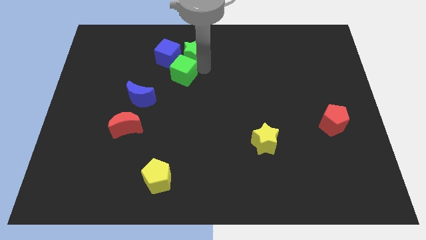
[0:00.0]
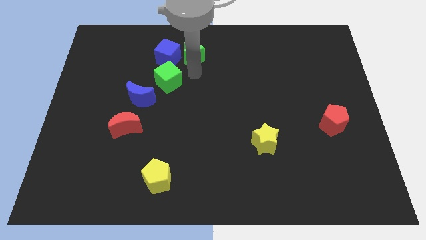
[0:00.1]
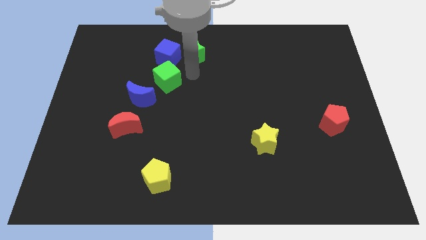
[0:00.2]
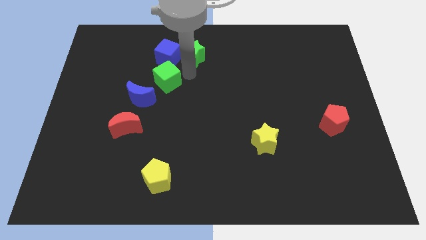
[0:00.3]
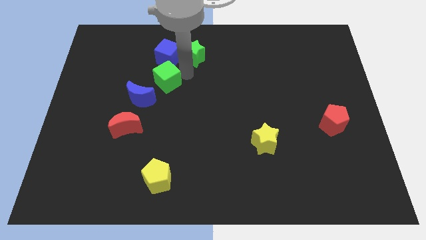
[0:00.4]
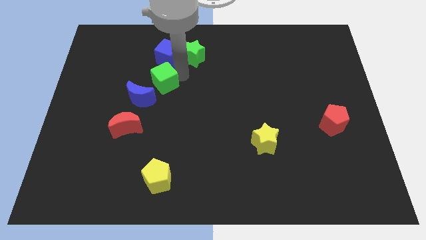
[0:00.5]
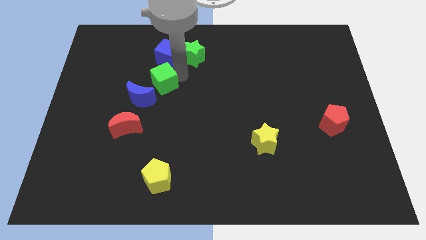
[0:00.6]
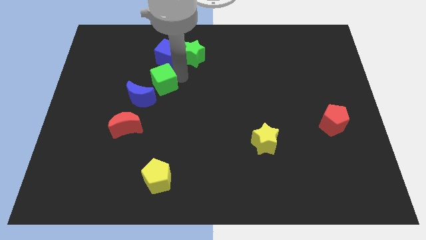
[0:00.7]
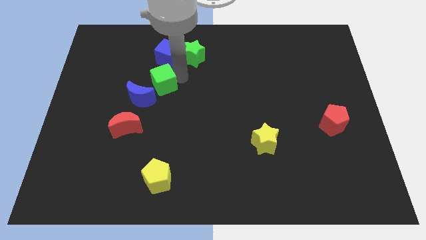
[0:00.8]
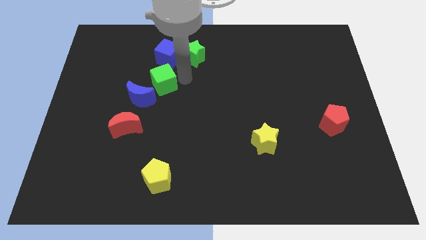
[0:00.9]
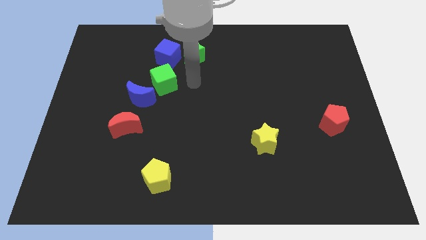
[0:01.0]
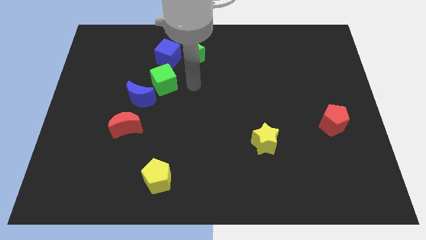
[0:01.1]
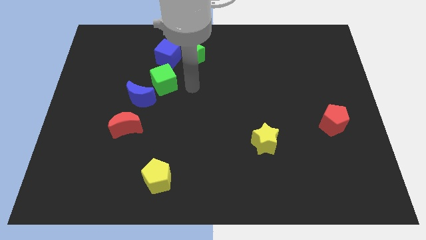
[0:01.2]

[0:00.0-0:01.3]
place the green cube in between the blue cube and blue moon

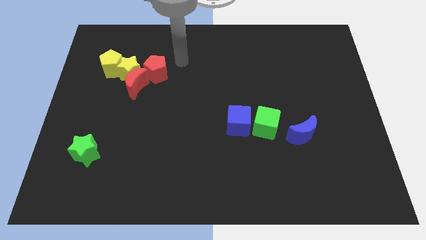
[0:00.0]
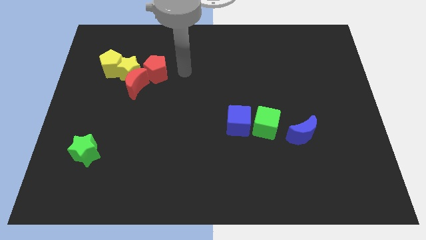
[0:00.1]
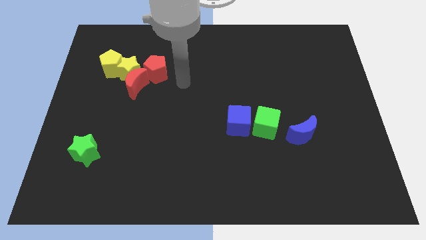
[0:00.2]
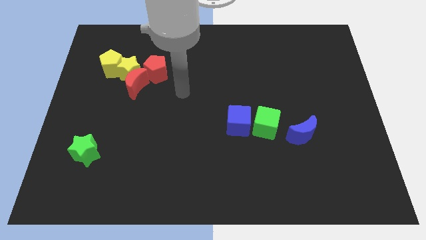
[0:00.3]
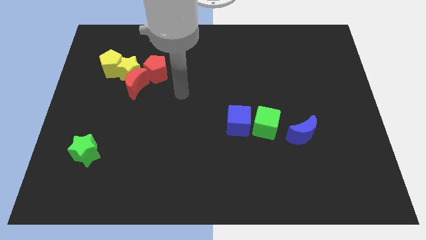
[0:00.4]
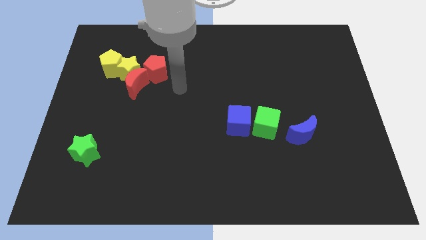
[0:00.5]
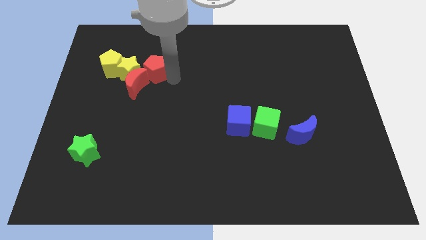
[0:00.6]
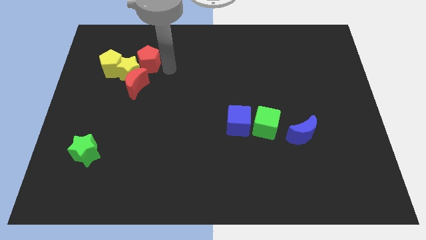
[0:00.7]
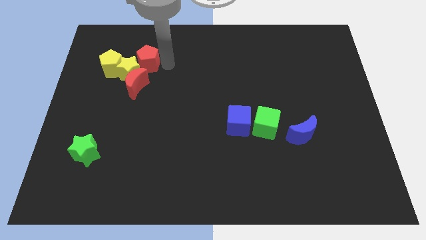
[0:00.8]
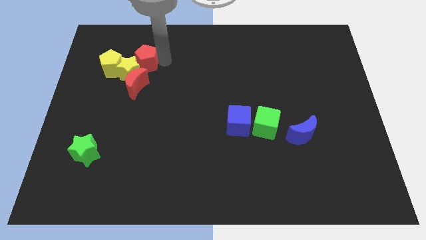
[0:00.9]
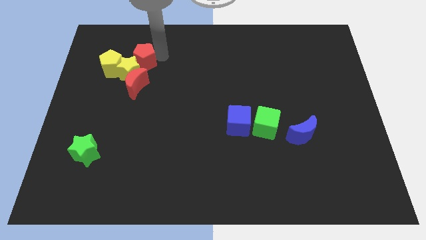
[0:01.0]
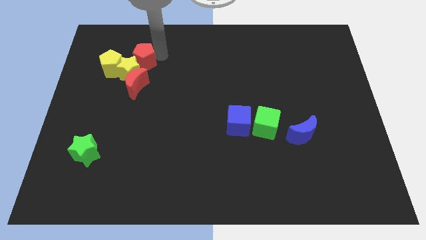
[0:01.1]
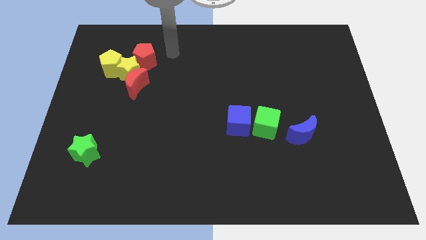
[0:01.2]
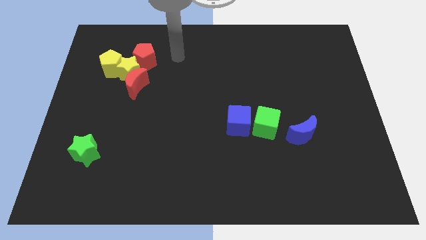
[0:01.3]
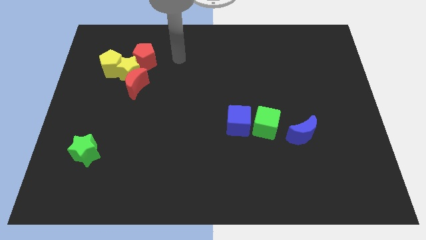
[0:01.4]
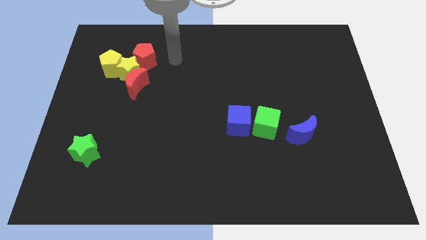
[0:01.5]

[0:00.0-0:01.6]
move the red pentagon vertically above the yellow star

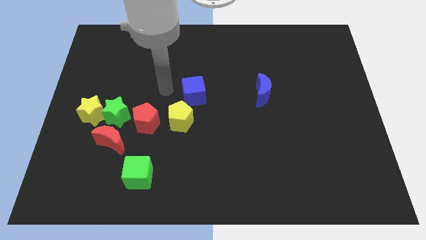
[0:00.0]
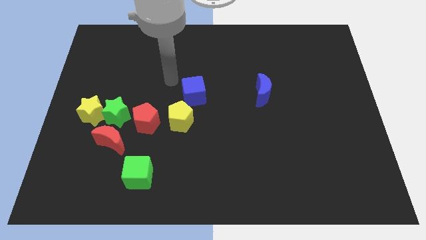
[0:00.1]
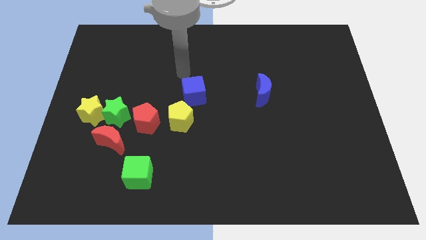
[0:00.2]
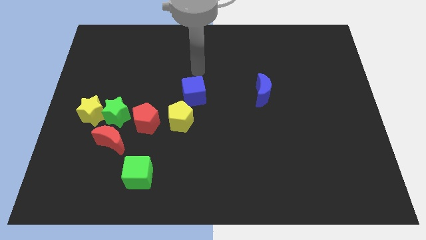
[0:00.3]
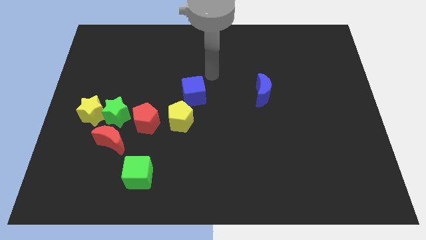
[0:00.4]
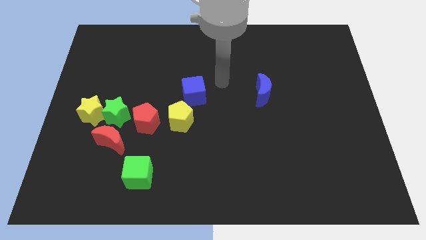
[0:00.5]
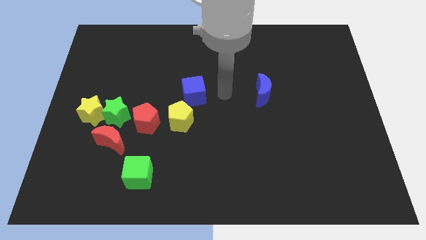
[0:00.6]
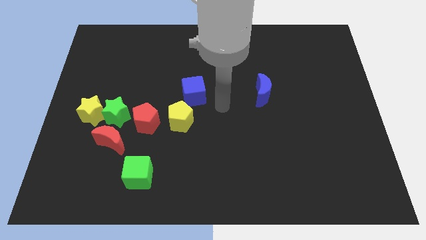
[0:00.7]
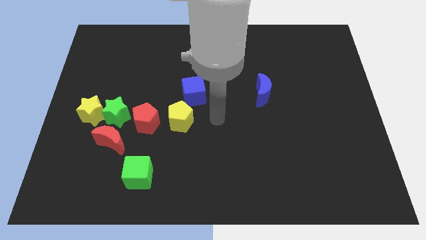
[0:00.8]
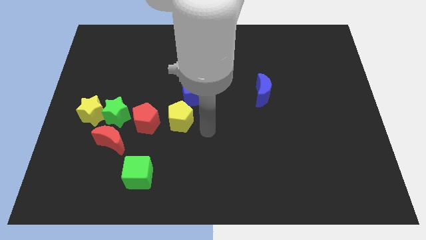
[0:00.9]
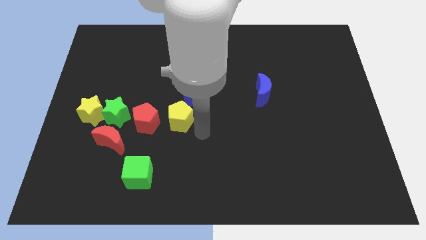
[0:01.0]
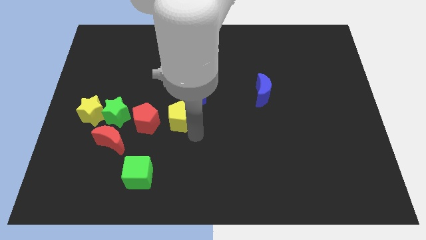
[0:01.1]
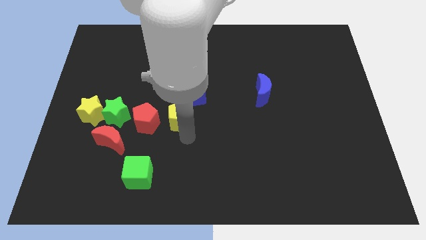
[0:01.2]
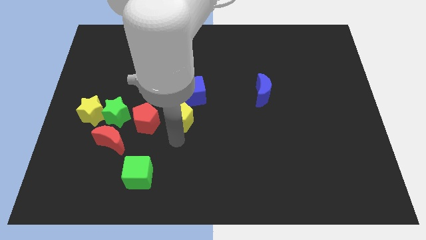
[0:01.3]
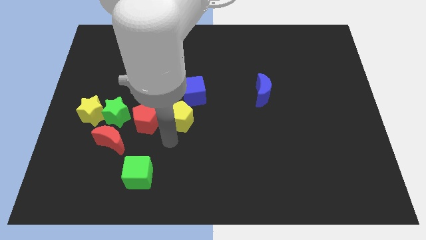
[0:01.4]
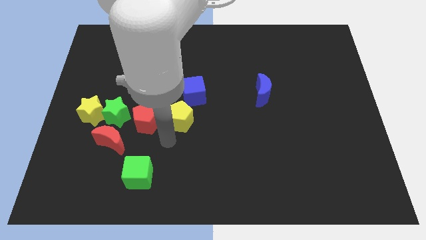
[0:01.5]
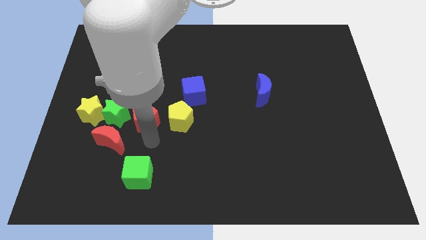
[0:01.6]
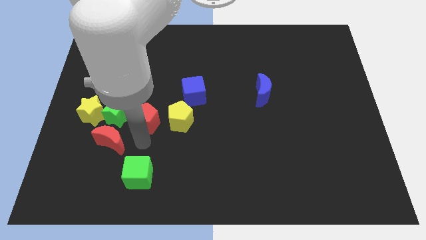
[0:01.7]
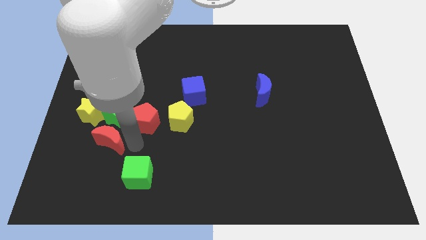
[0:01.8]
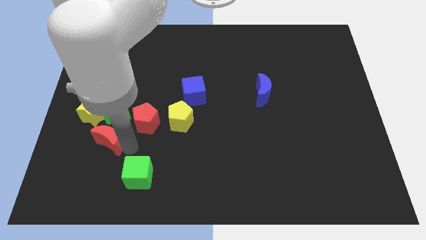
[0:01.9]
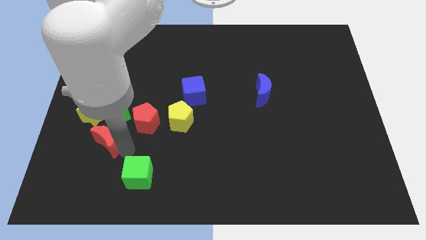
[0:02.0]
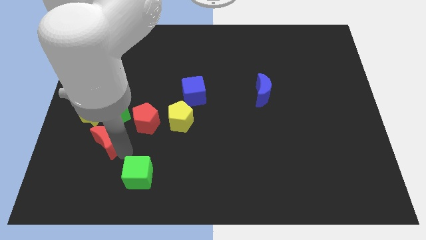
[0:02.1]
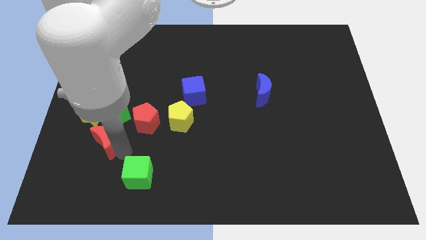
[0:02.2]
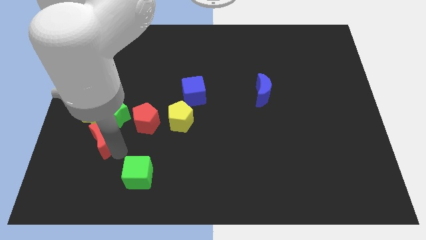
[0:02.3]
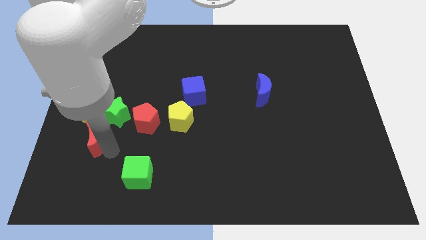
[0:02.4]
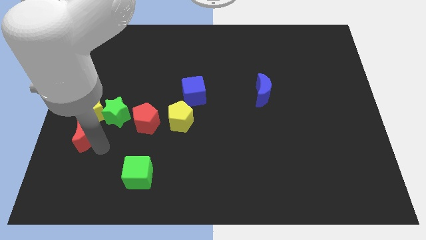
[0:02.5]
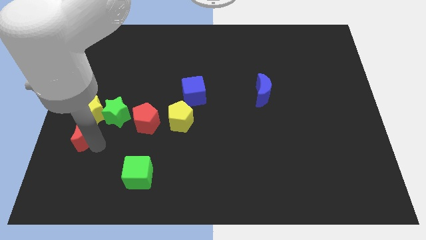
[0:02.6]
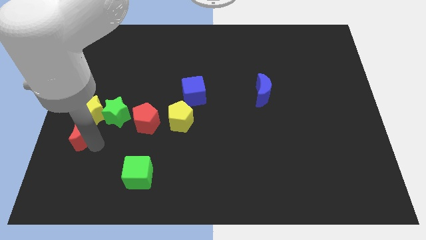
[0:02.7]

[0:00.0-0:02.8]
move the red crescent below the yellow star

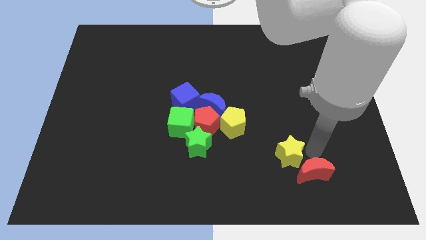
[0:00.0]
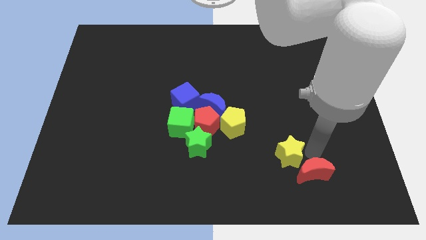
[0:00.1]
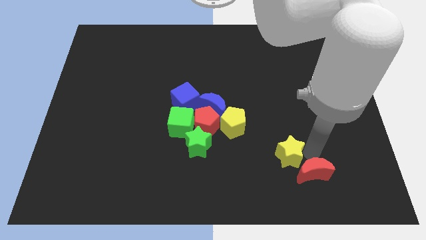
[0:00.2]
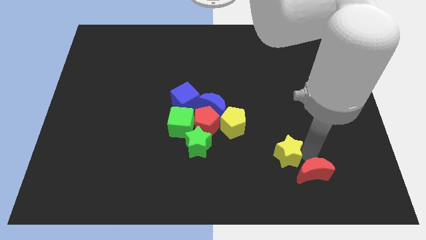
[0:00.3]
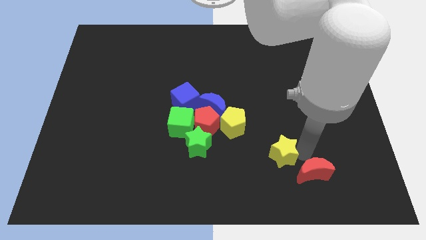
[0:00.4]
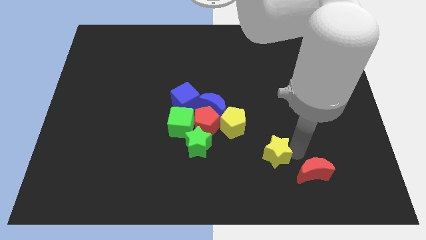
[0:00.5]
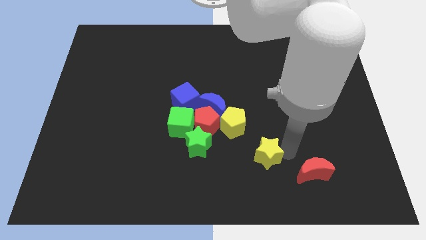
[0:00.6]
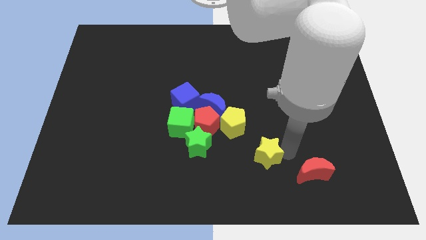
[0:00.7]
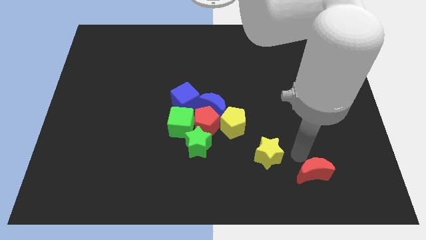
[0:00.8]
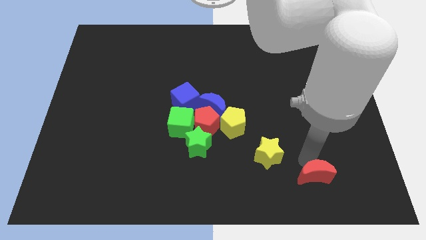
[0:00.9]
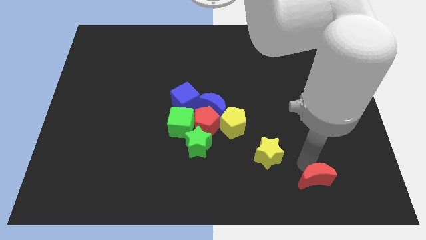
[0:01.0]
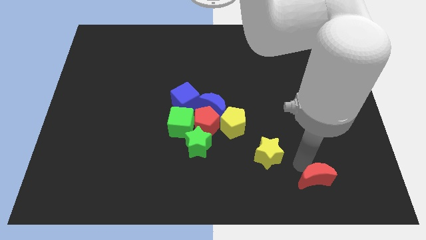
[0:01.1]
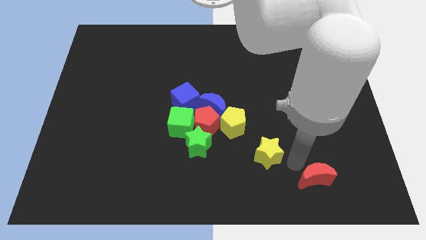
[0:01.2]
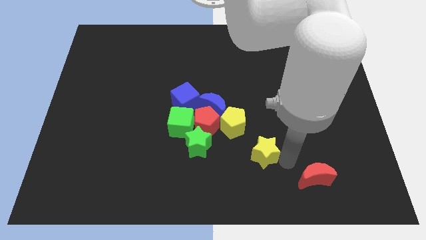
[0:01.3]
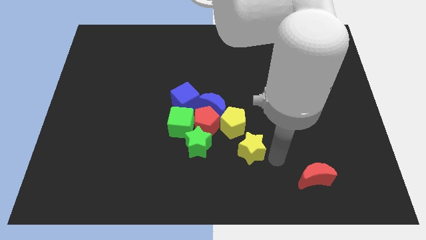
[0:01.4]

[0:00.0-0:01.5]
separate yellow star from the red moon

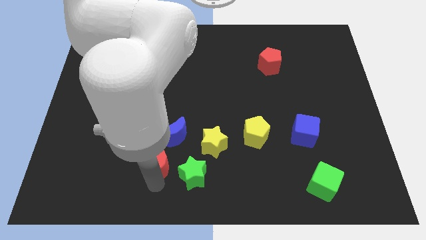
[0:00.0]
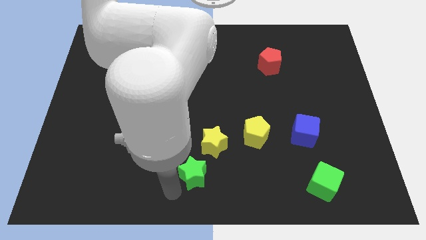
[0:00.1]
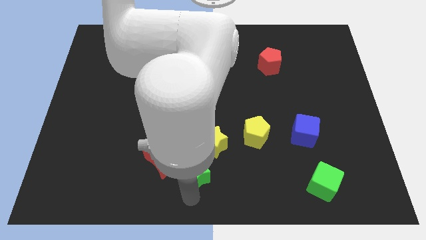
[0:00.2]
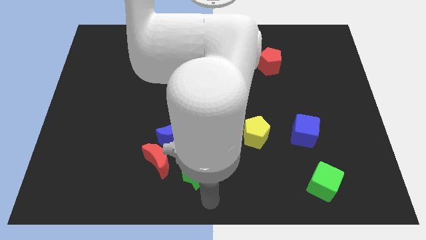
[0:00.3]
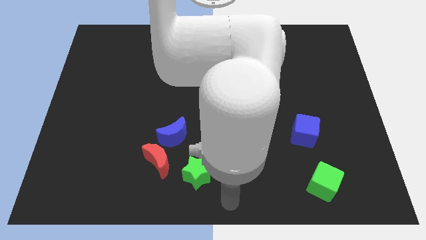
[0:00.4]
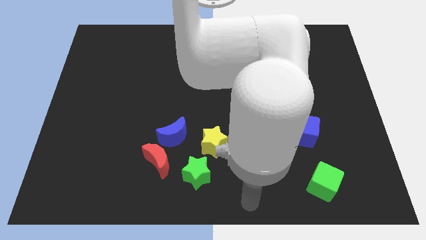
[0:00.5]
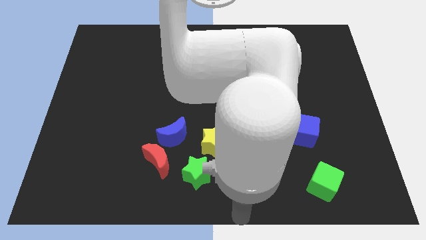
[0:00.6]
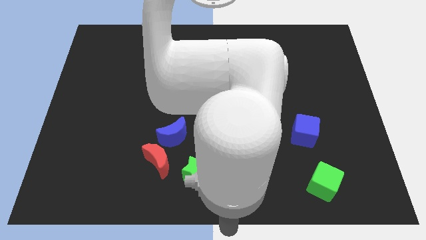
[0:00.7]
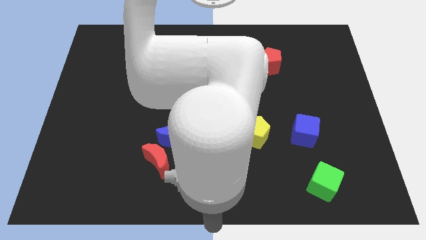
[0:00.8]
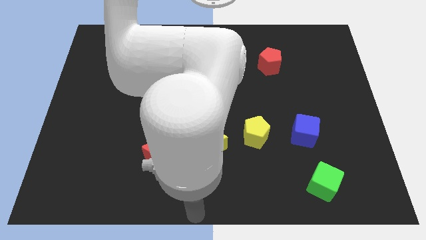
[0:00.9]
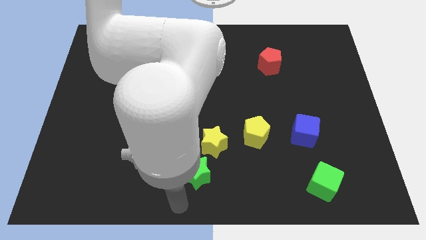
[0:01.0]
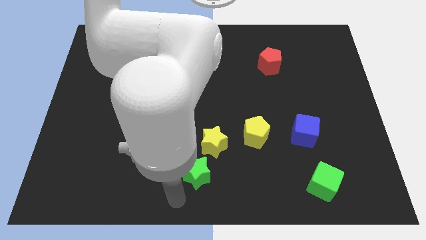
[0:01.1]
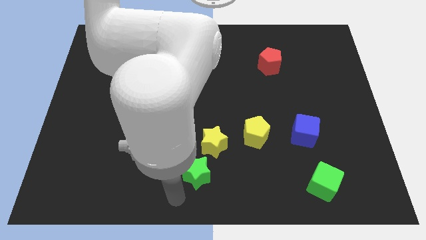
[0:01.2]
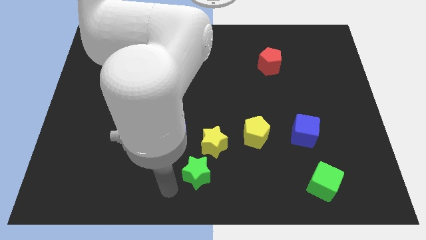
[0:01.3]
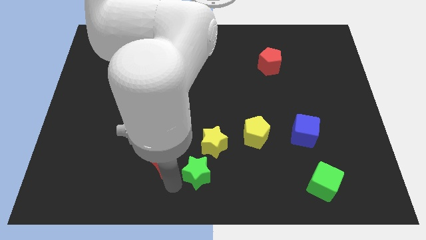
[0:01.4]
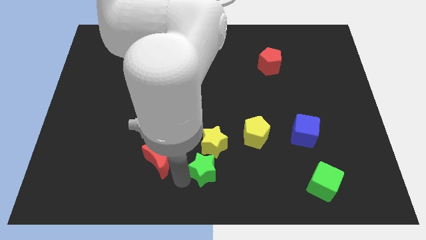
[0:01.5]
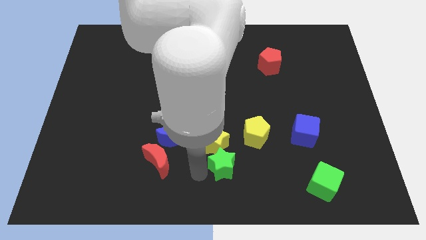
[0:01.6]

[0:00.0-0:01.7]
push thee green star into the yellow star
